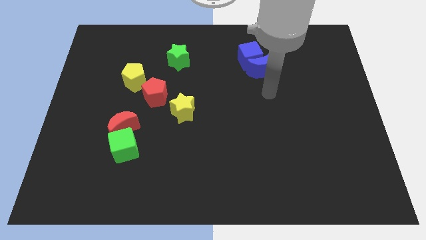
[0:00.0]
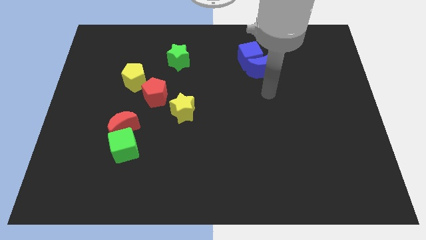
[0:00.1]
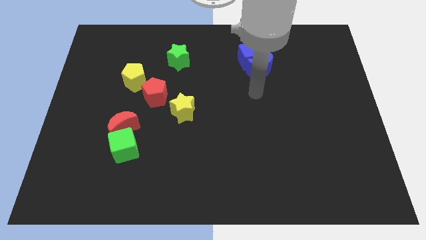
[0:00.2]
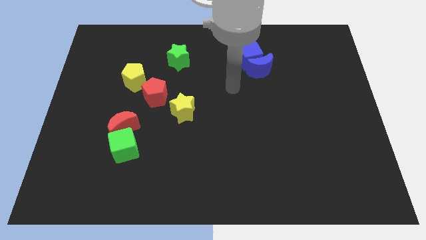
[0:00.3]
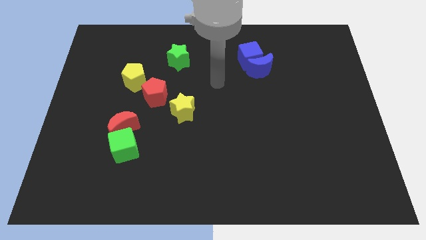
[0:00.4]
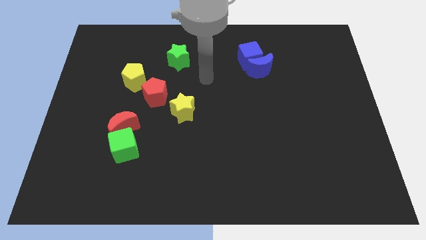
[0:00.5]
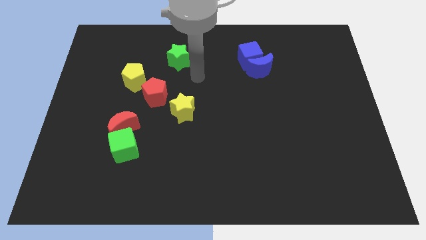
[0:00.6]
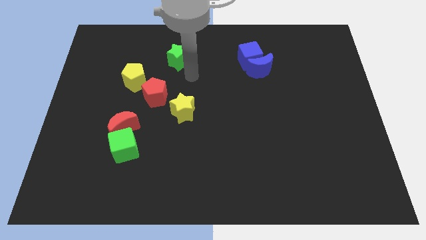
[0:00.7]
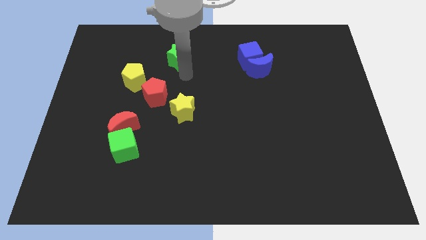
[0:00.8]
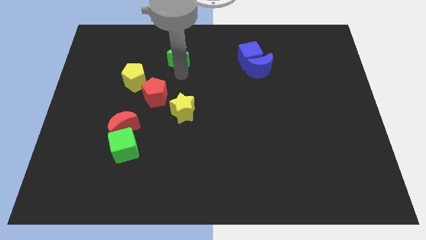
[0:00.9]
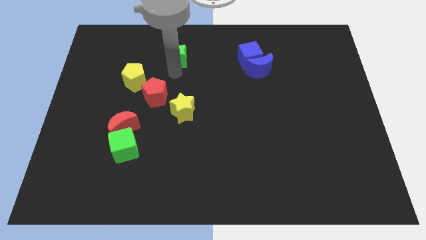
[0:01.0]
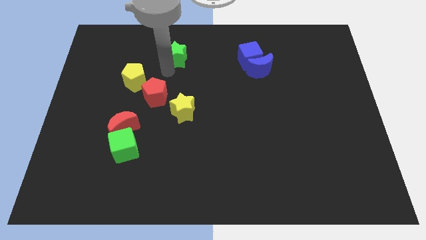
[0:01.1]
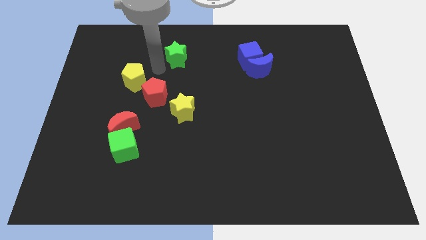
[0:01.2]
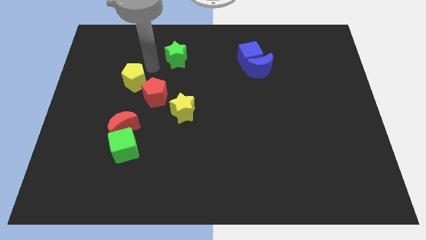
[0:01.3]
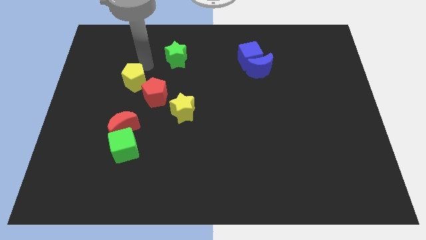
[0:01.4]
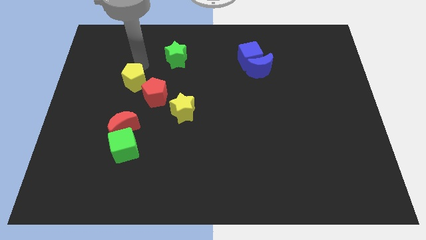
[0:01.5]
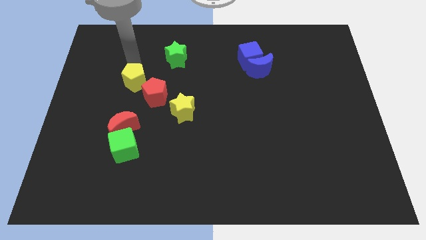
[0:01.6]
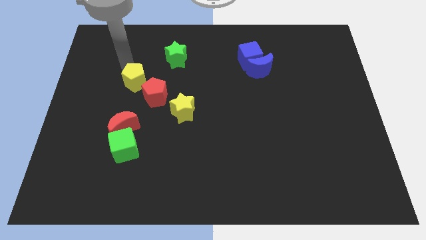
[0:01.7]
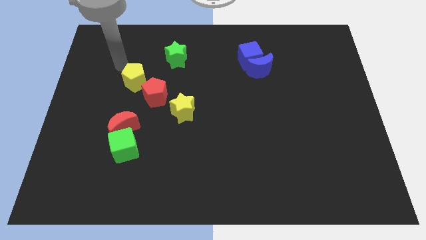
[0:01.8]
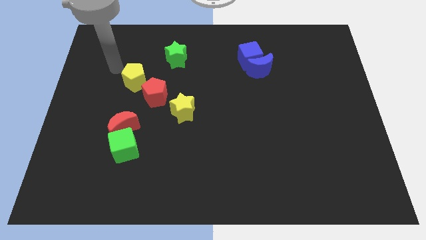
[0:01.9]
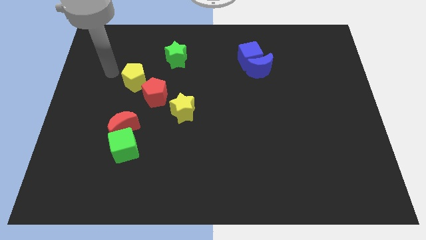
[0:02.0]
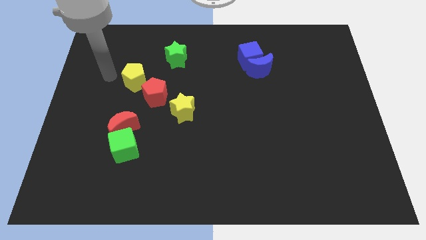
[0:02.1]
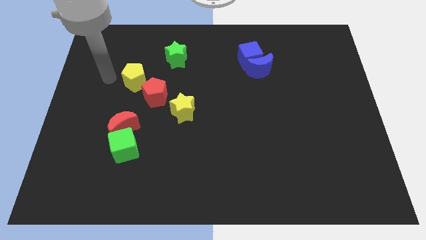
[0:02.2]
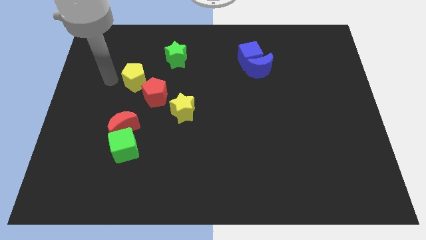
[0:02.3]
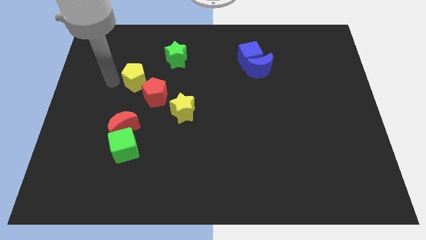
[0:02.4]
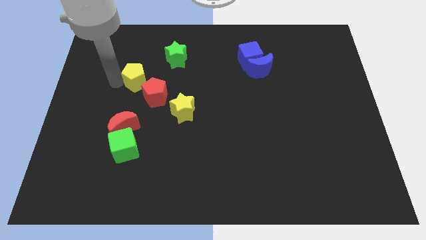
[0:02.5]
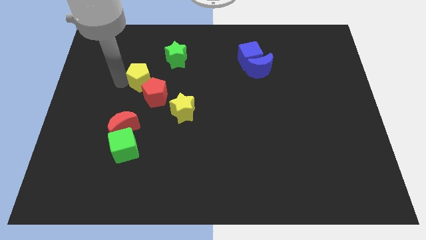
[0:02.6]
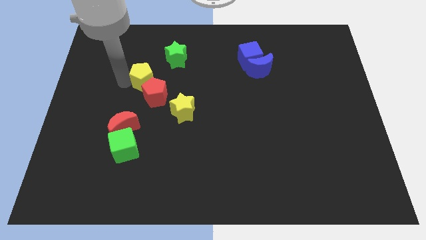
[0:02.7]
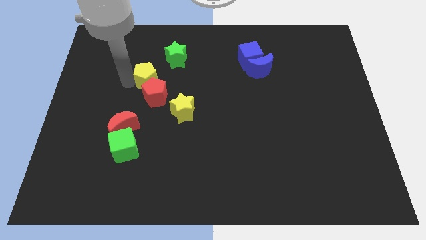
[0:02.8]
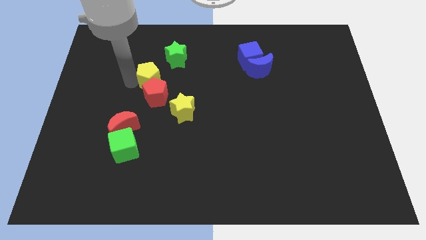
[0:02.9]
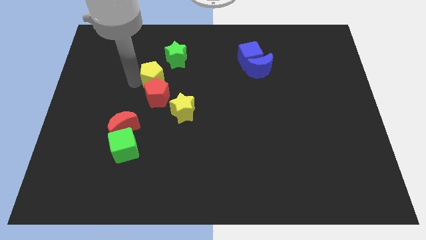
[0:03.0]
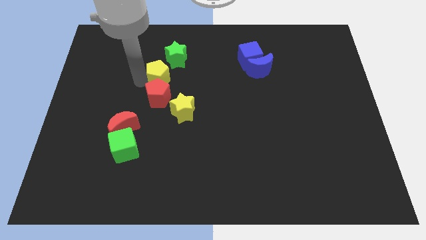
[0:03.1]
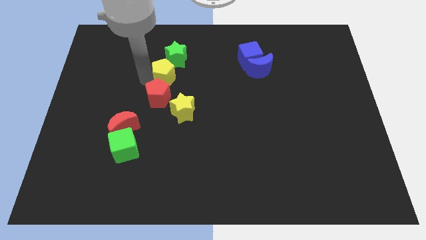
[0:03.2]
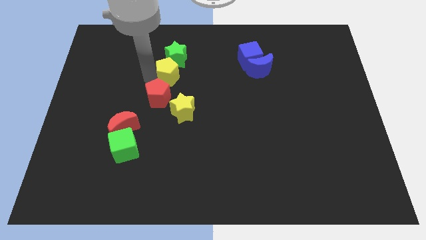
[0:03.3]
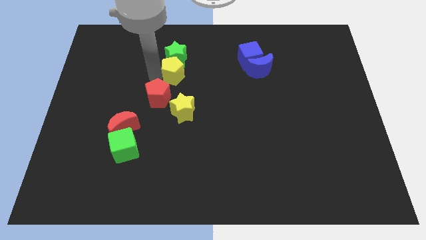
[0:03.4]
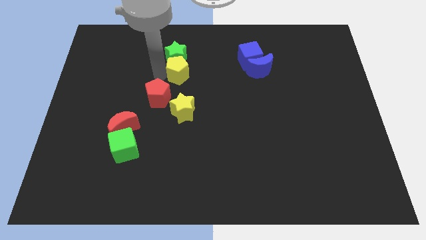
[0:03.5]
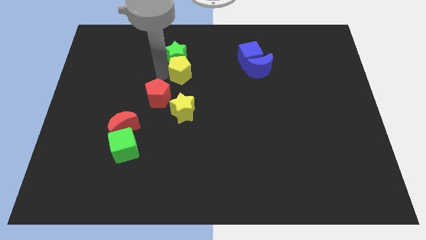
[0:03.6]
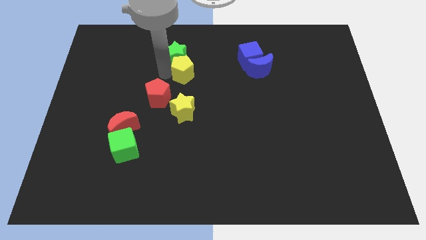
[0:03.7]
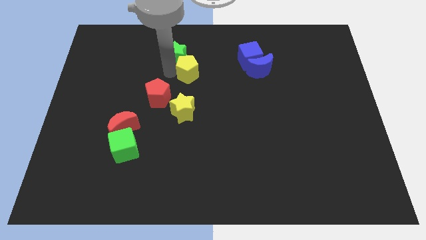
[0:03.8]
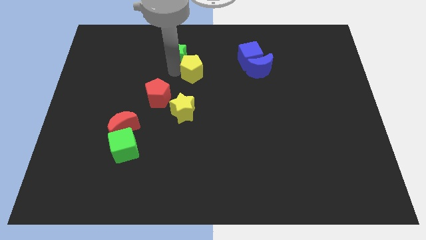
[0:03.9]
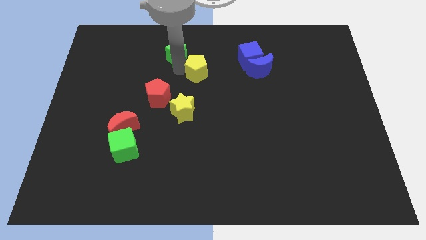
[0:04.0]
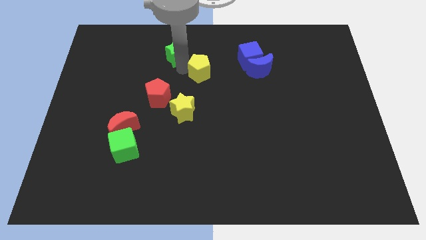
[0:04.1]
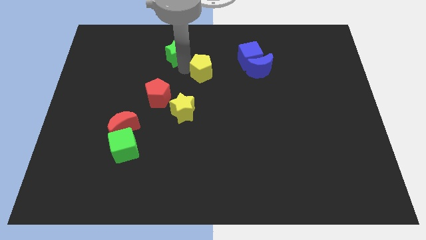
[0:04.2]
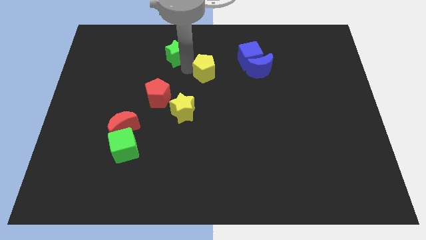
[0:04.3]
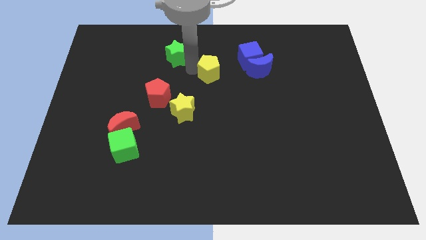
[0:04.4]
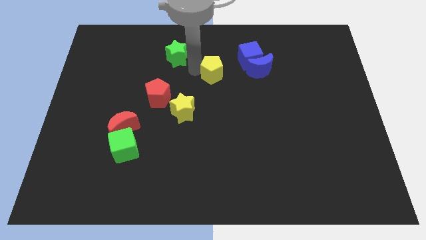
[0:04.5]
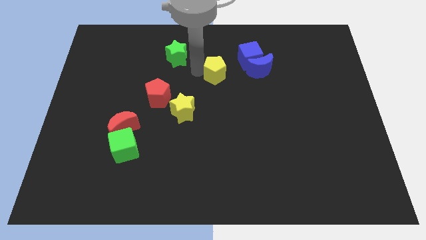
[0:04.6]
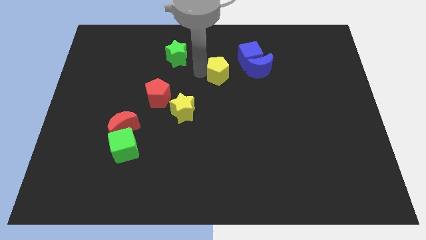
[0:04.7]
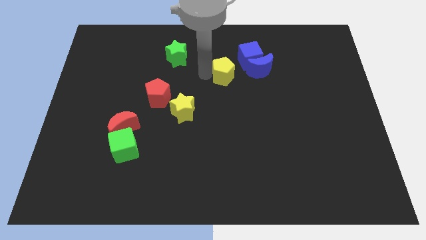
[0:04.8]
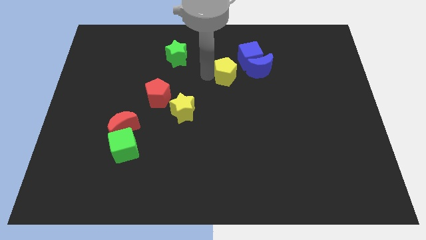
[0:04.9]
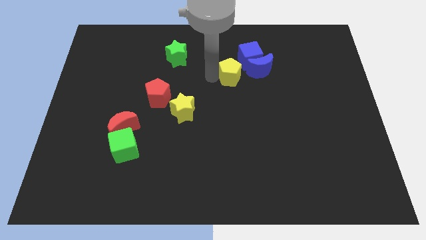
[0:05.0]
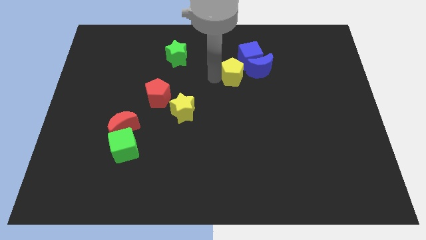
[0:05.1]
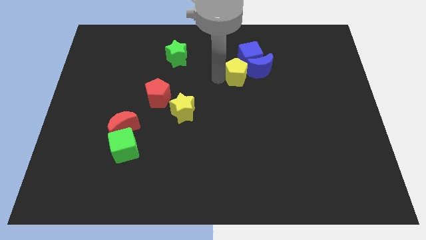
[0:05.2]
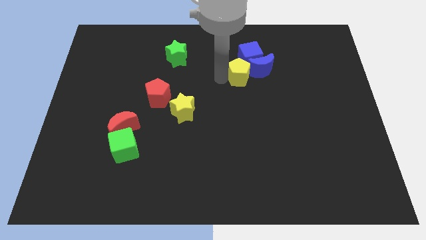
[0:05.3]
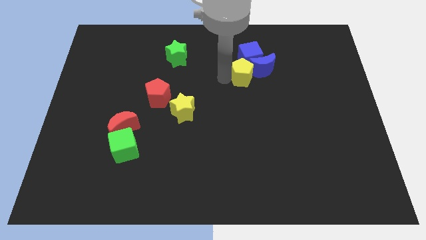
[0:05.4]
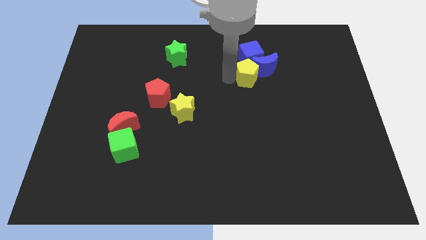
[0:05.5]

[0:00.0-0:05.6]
slide the yellow pentagon next to the blue moon

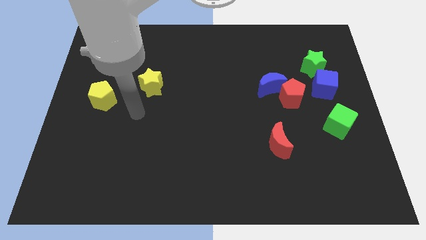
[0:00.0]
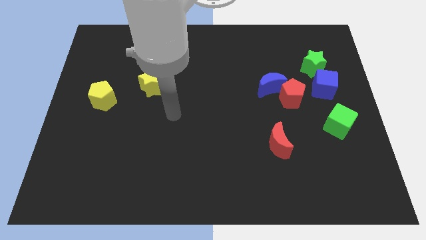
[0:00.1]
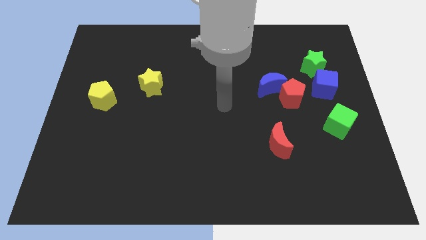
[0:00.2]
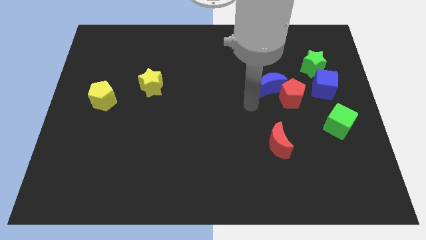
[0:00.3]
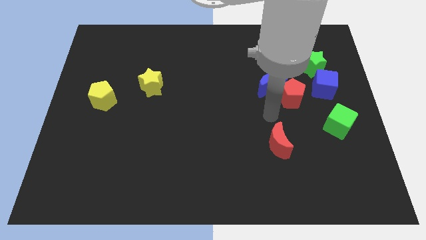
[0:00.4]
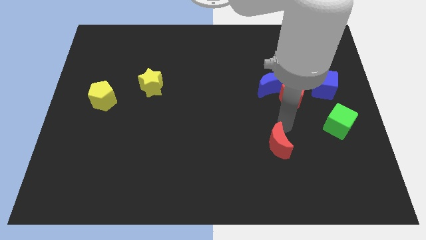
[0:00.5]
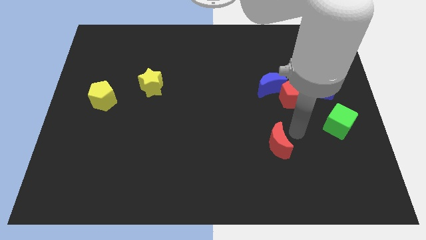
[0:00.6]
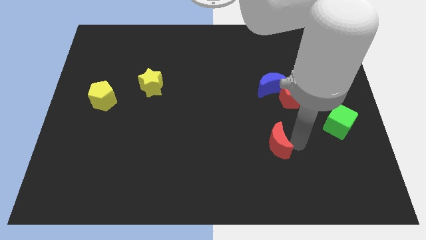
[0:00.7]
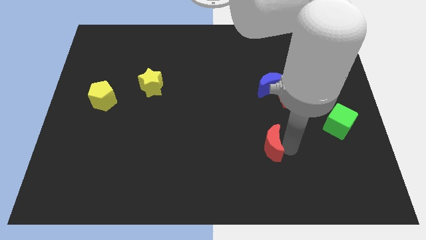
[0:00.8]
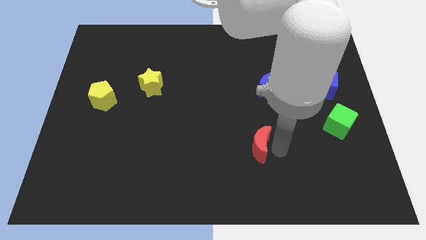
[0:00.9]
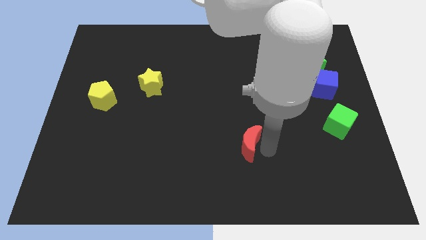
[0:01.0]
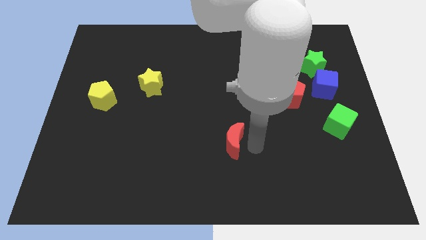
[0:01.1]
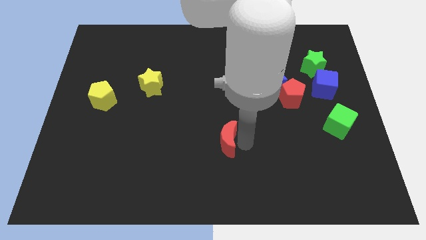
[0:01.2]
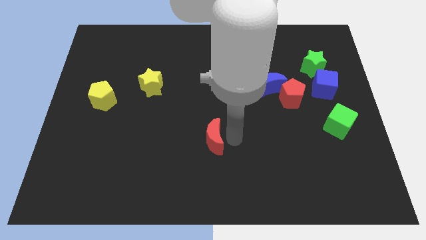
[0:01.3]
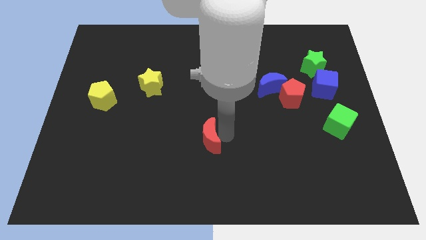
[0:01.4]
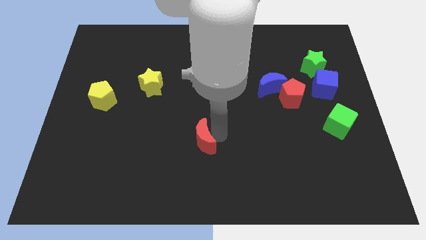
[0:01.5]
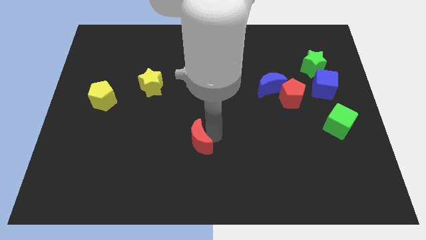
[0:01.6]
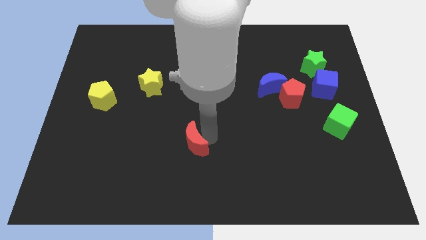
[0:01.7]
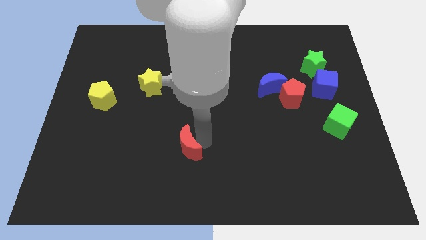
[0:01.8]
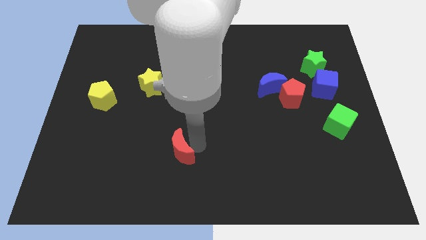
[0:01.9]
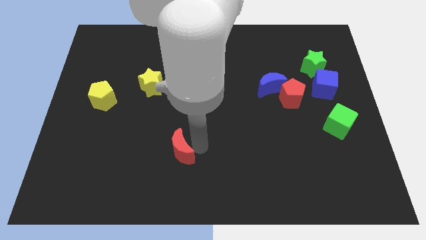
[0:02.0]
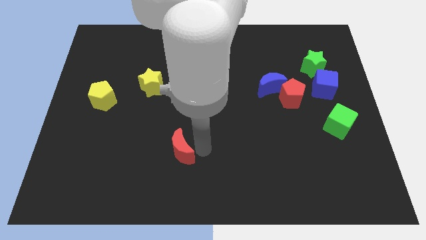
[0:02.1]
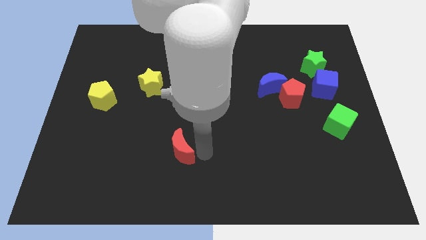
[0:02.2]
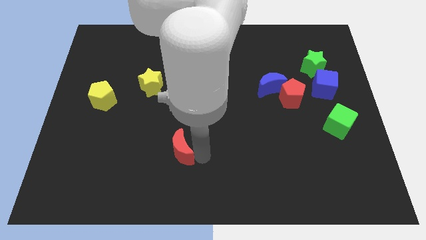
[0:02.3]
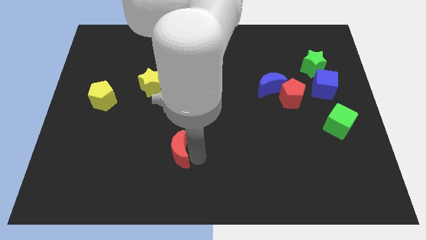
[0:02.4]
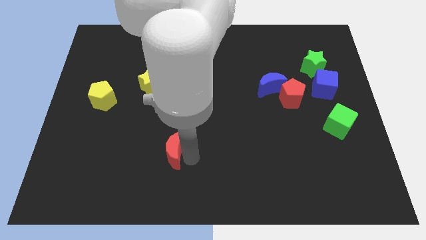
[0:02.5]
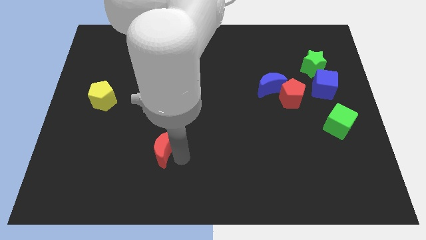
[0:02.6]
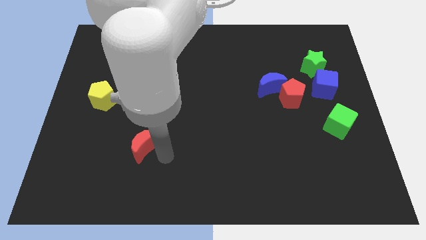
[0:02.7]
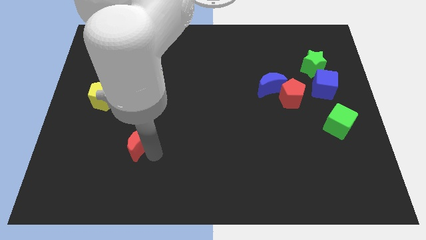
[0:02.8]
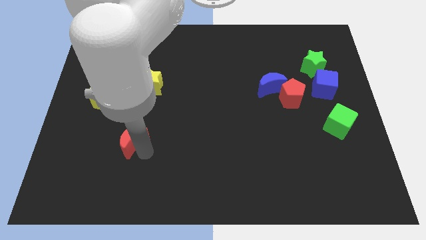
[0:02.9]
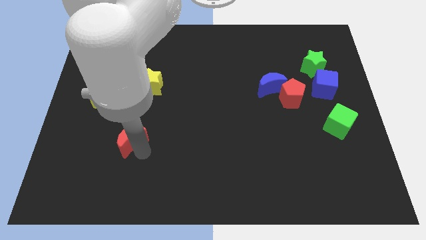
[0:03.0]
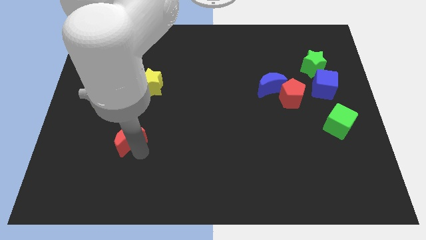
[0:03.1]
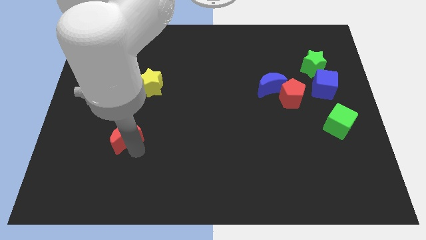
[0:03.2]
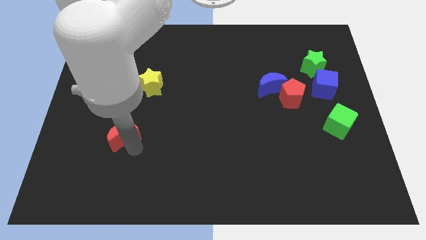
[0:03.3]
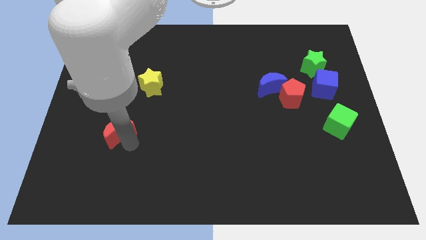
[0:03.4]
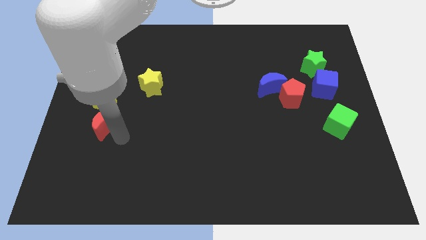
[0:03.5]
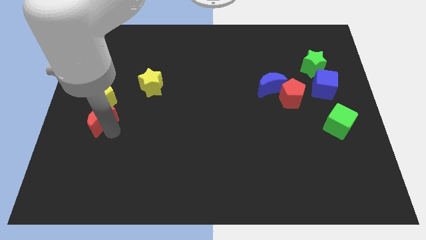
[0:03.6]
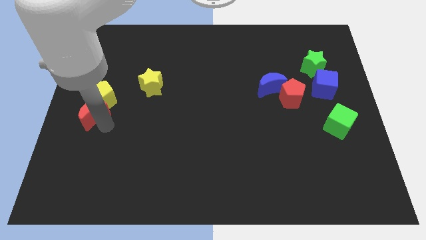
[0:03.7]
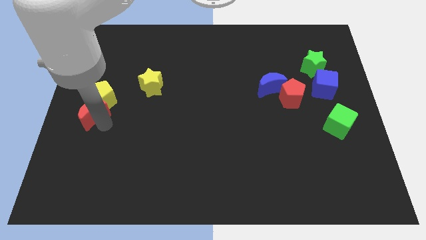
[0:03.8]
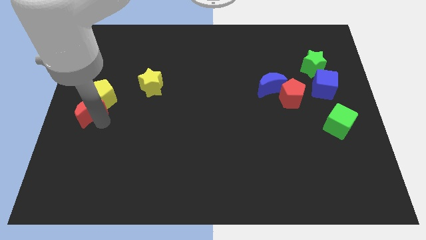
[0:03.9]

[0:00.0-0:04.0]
slide the red moon next to the yellow pentagon
